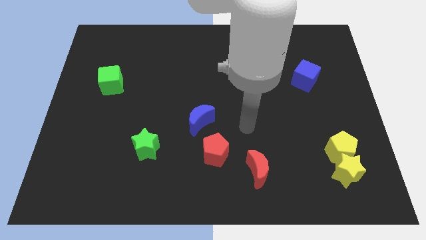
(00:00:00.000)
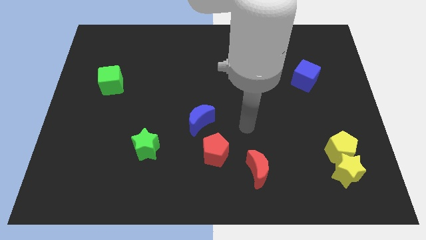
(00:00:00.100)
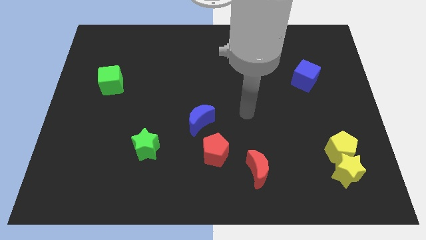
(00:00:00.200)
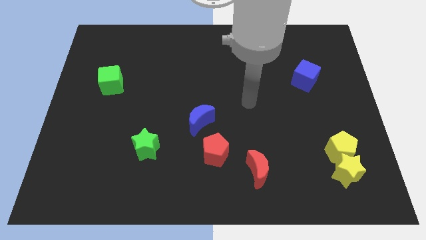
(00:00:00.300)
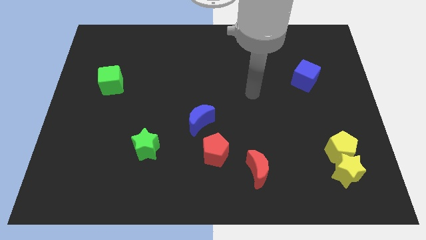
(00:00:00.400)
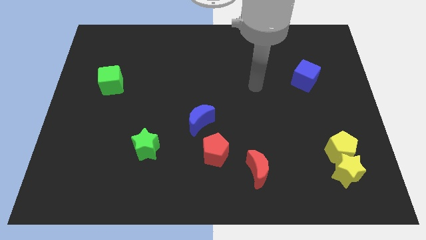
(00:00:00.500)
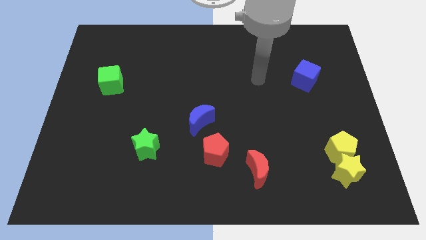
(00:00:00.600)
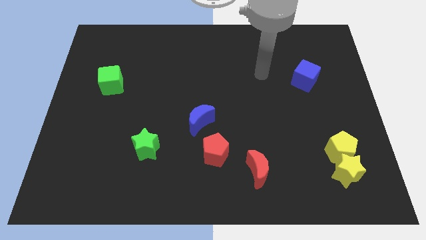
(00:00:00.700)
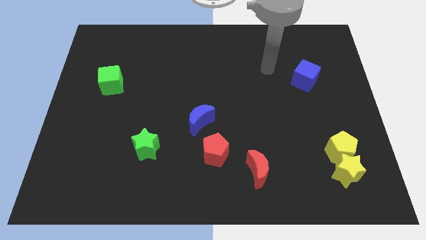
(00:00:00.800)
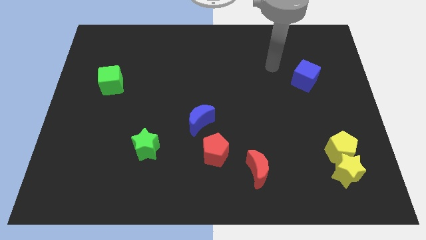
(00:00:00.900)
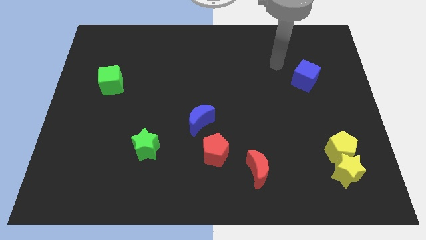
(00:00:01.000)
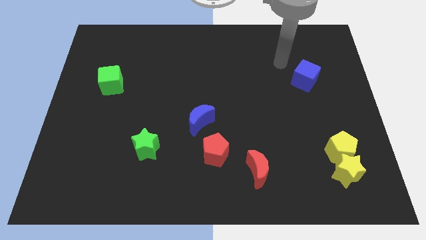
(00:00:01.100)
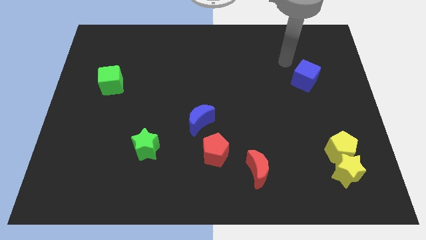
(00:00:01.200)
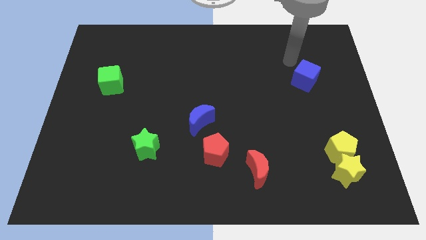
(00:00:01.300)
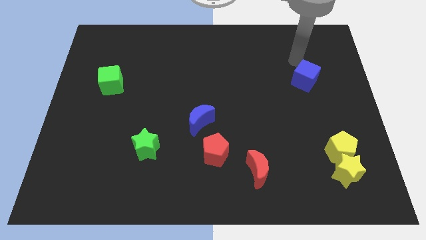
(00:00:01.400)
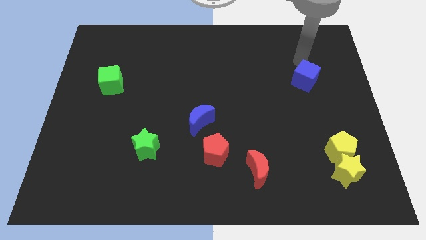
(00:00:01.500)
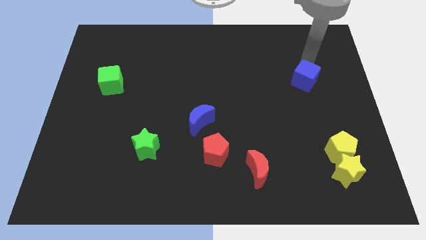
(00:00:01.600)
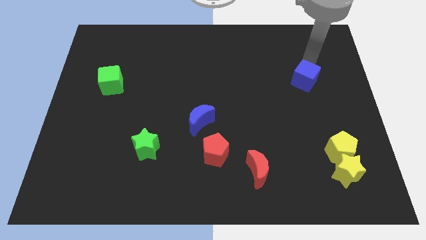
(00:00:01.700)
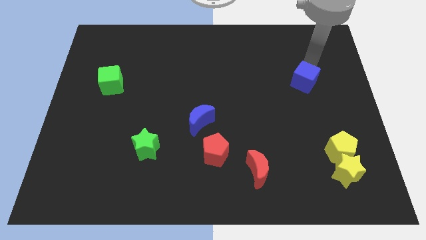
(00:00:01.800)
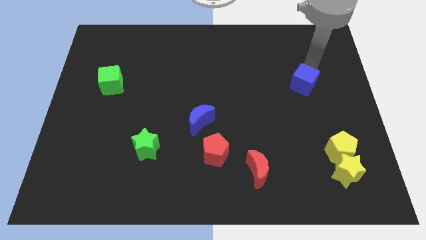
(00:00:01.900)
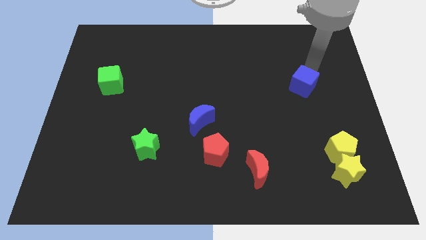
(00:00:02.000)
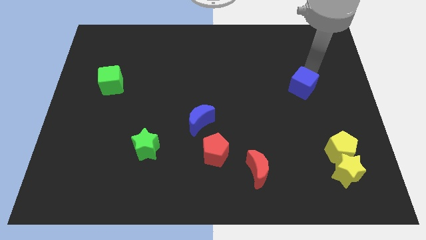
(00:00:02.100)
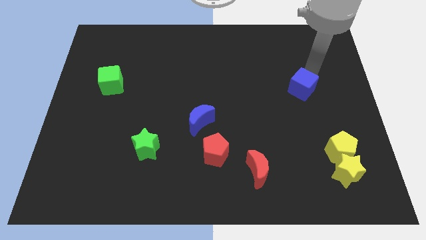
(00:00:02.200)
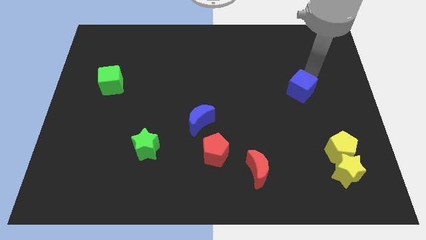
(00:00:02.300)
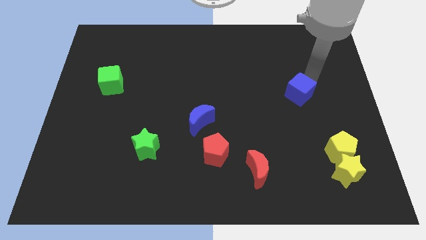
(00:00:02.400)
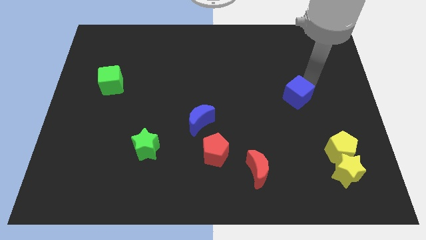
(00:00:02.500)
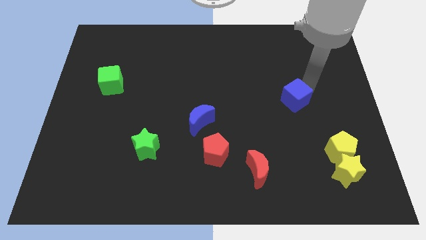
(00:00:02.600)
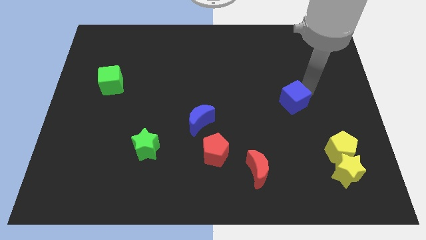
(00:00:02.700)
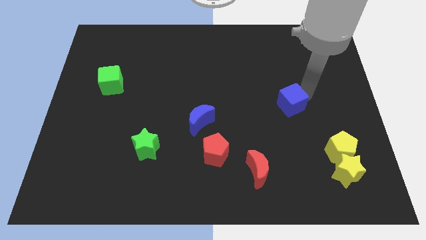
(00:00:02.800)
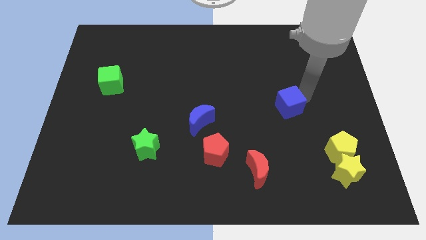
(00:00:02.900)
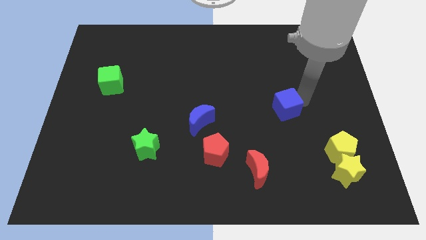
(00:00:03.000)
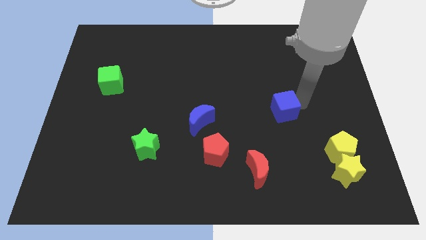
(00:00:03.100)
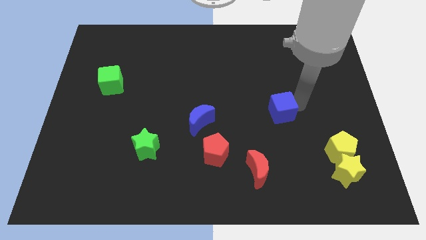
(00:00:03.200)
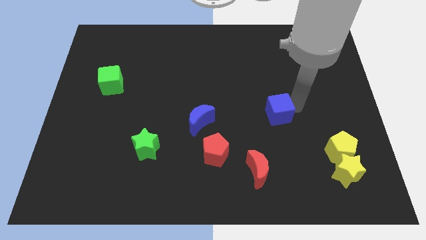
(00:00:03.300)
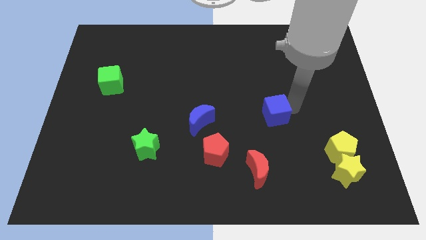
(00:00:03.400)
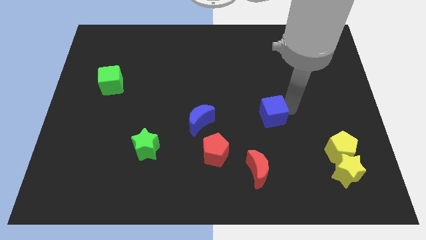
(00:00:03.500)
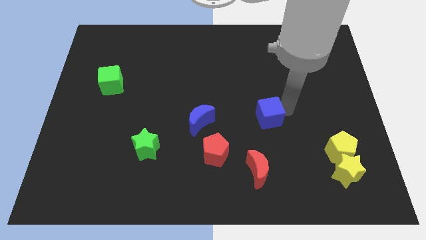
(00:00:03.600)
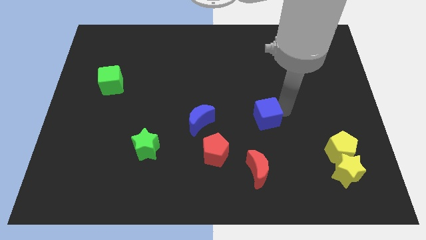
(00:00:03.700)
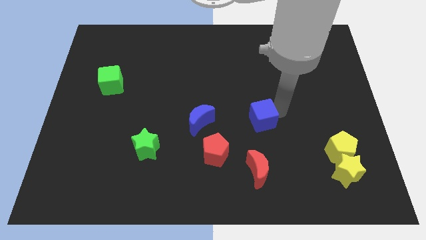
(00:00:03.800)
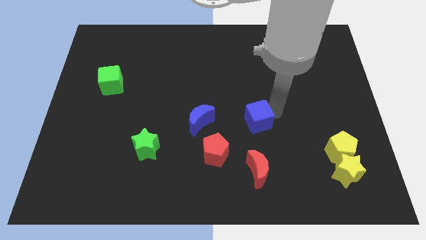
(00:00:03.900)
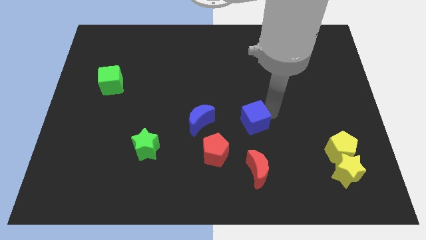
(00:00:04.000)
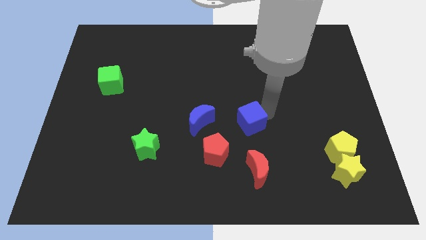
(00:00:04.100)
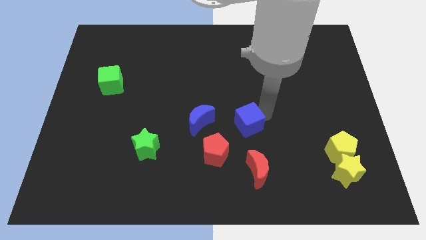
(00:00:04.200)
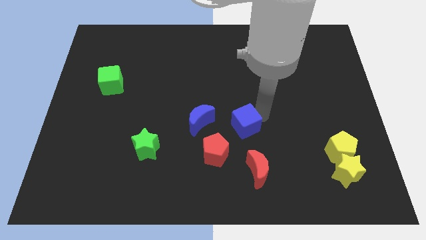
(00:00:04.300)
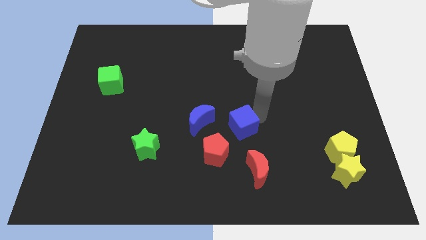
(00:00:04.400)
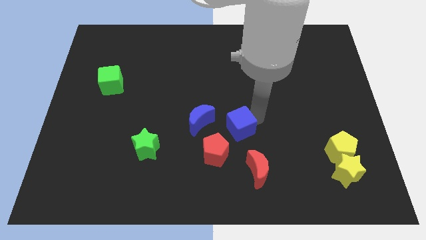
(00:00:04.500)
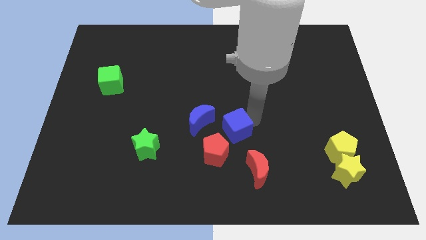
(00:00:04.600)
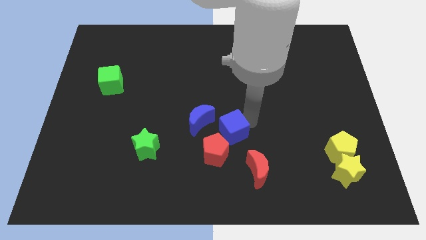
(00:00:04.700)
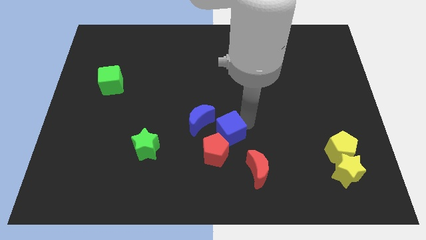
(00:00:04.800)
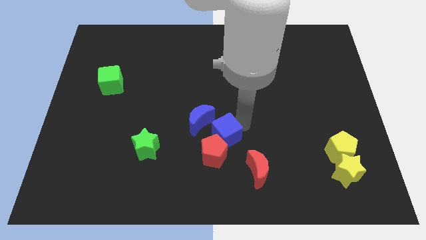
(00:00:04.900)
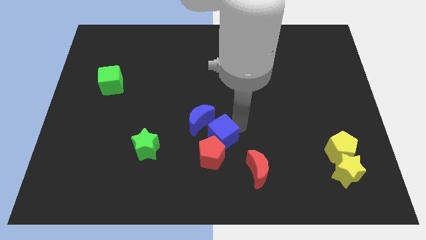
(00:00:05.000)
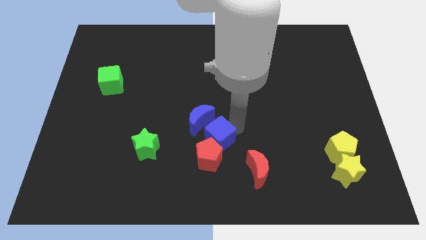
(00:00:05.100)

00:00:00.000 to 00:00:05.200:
push the blue cube close to the red pentagon

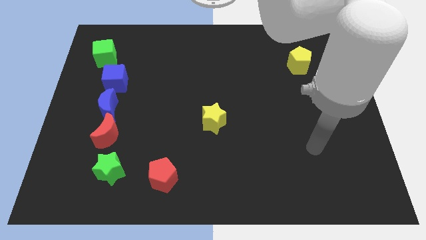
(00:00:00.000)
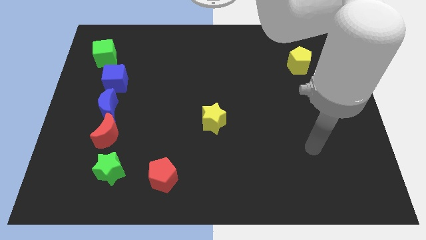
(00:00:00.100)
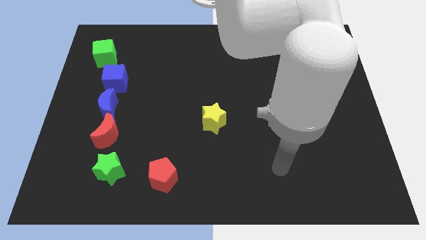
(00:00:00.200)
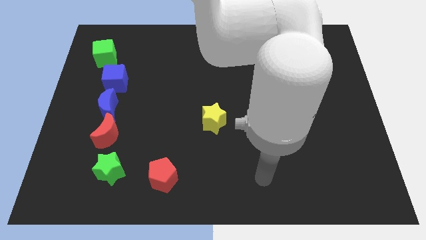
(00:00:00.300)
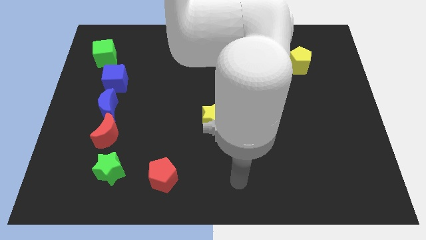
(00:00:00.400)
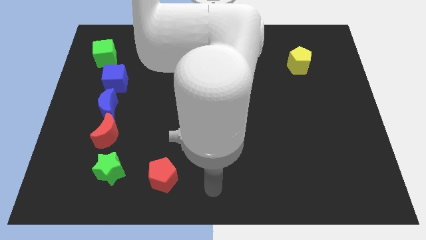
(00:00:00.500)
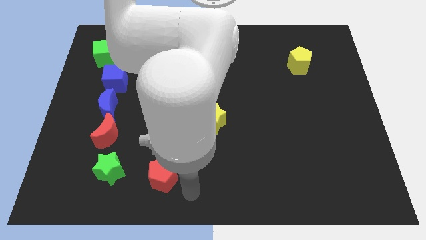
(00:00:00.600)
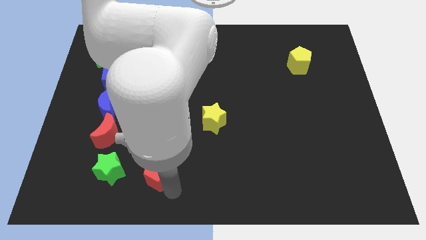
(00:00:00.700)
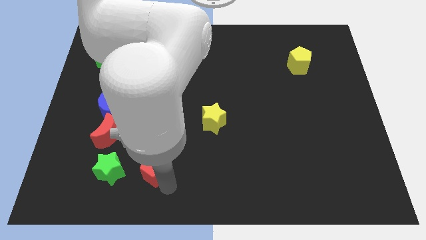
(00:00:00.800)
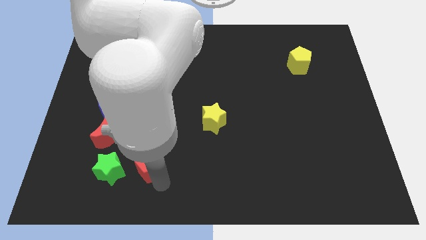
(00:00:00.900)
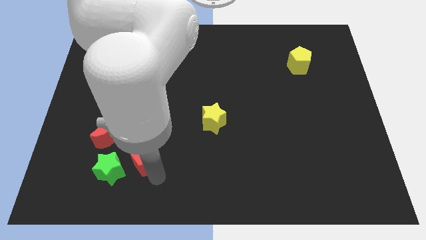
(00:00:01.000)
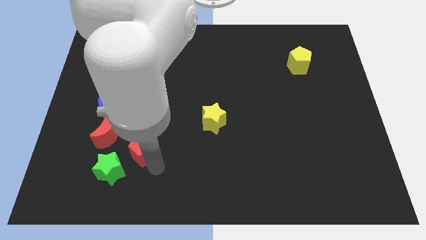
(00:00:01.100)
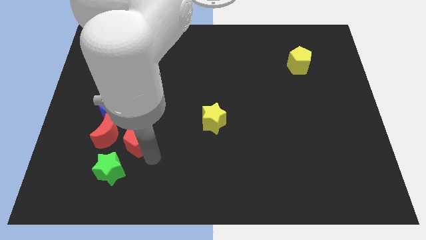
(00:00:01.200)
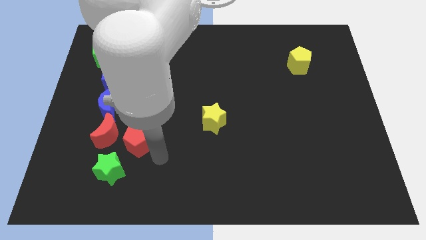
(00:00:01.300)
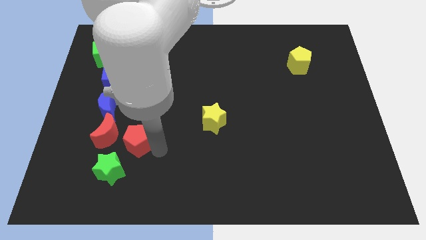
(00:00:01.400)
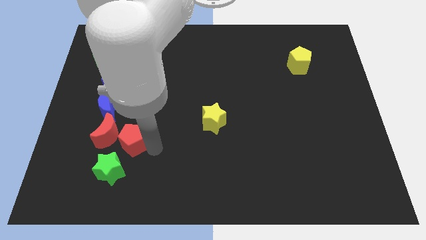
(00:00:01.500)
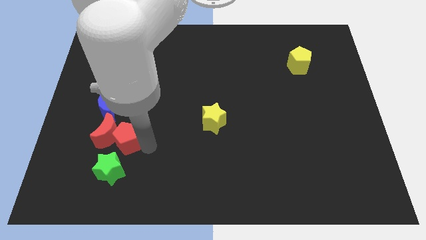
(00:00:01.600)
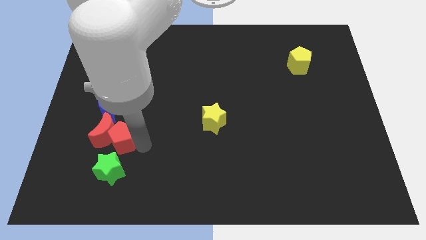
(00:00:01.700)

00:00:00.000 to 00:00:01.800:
slide the red pentagon towards the red moon

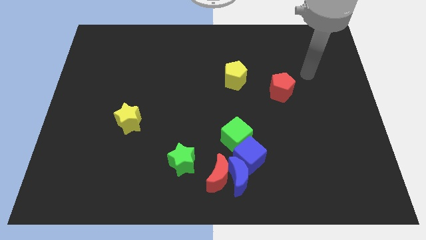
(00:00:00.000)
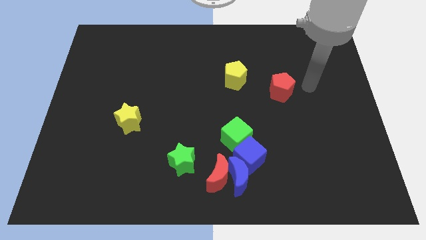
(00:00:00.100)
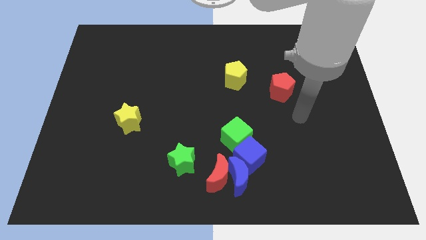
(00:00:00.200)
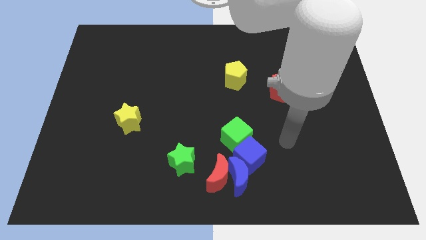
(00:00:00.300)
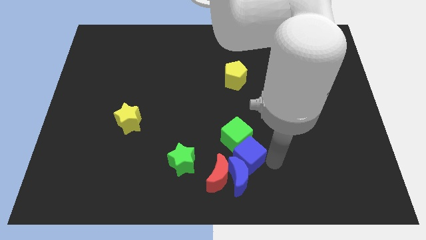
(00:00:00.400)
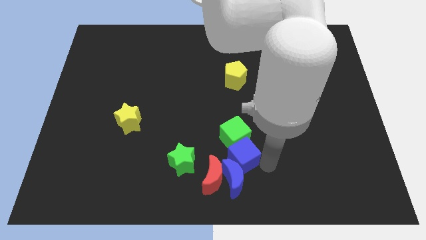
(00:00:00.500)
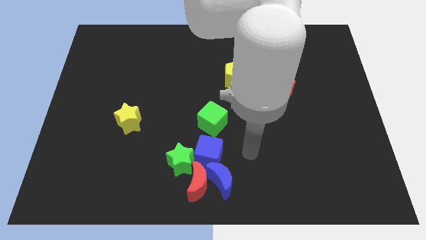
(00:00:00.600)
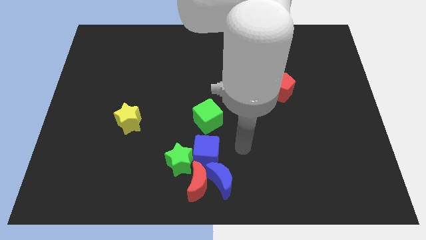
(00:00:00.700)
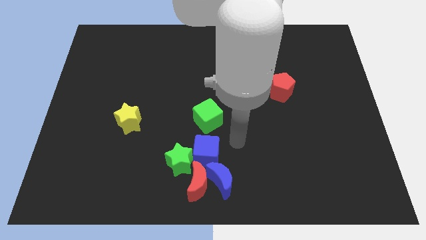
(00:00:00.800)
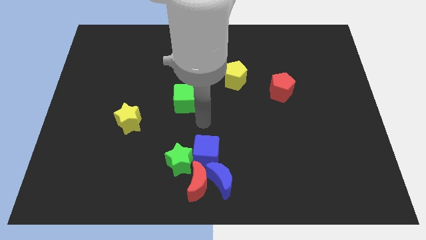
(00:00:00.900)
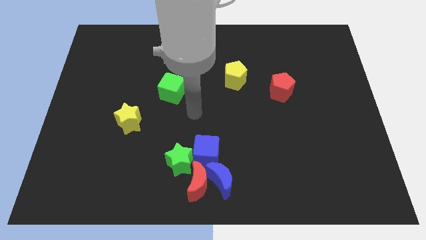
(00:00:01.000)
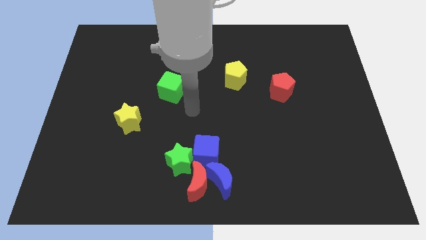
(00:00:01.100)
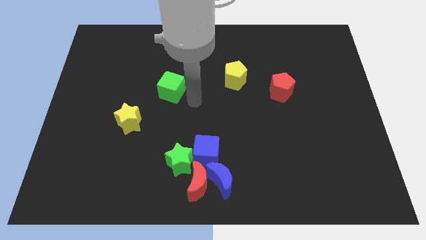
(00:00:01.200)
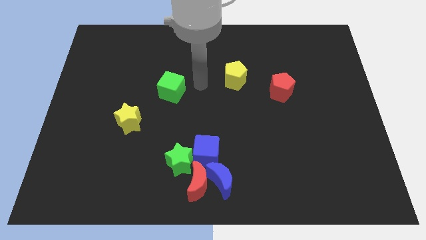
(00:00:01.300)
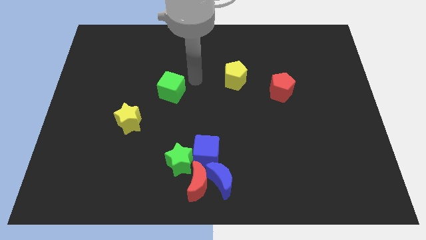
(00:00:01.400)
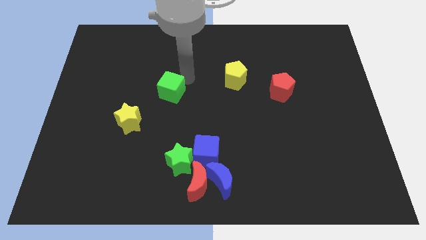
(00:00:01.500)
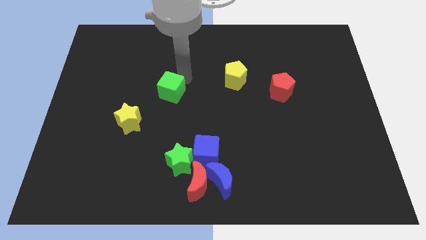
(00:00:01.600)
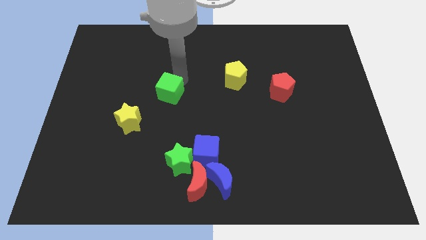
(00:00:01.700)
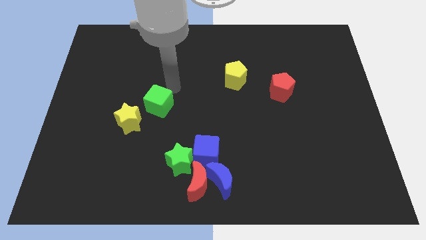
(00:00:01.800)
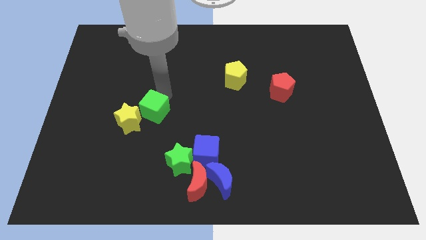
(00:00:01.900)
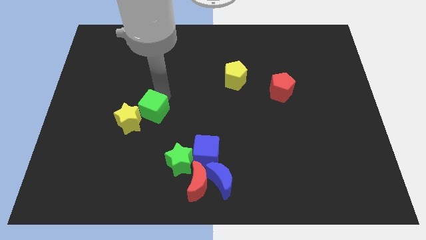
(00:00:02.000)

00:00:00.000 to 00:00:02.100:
slide the green cube to the yellow star
